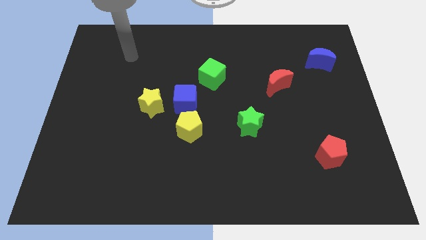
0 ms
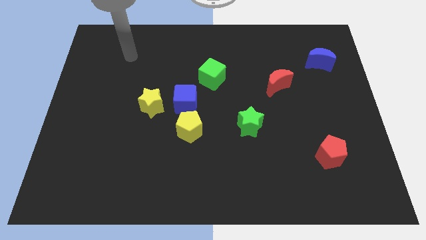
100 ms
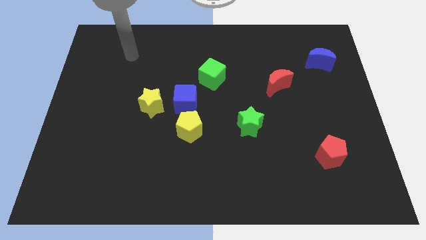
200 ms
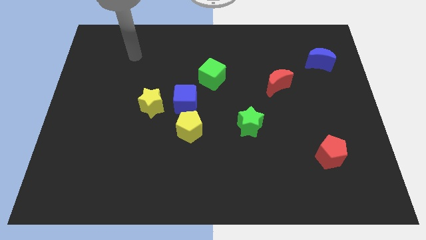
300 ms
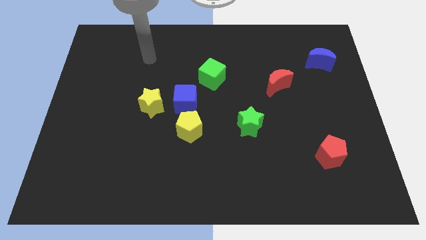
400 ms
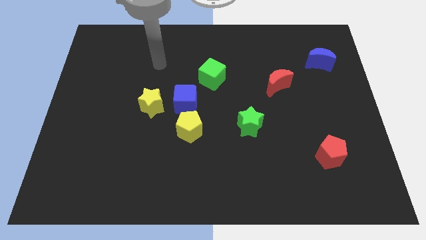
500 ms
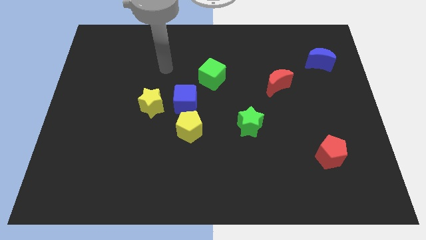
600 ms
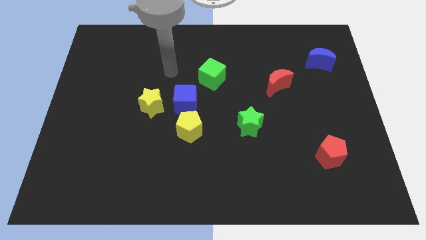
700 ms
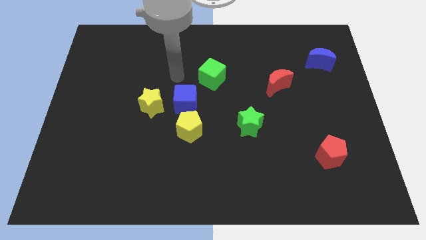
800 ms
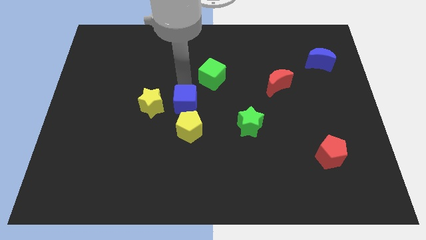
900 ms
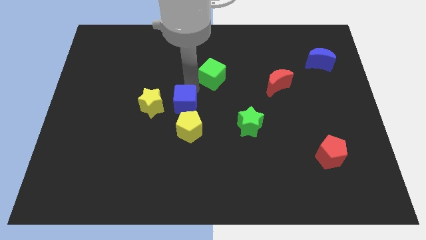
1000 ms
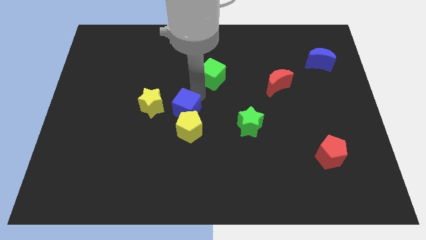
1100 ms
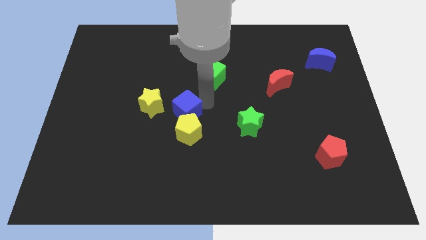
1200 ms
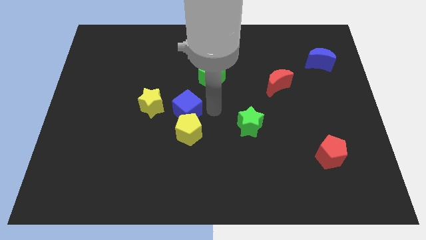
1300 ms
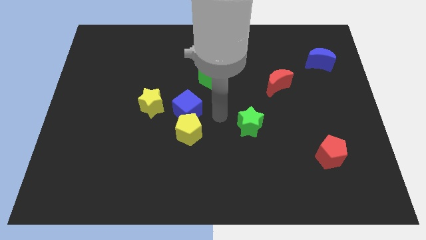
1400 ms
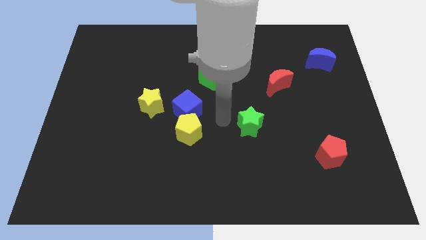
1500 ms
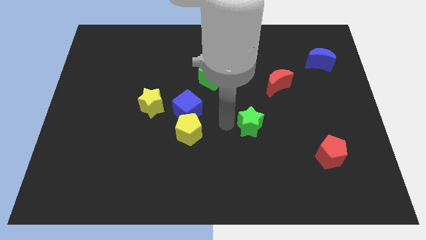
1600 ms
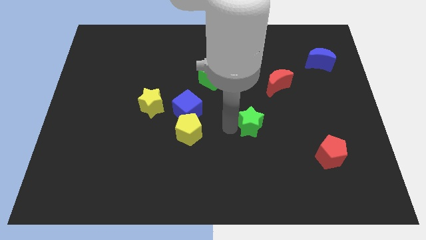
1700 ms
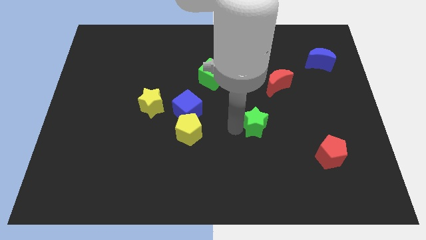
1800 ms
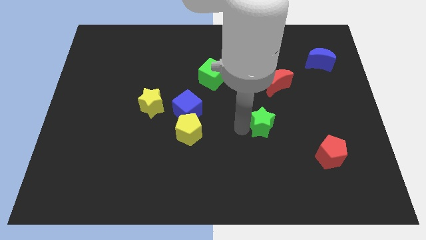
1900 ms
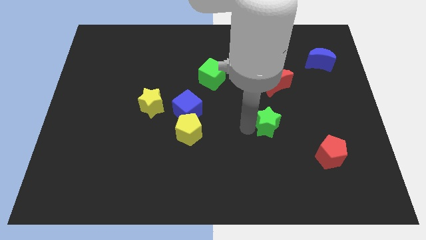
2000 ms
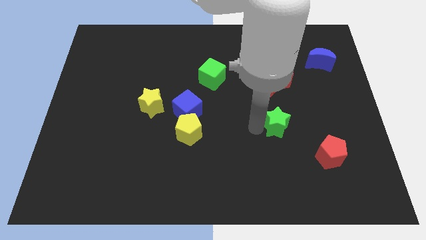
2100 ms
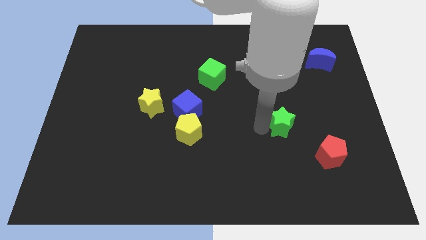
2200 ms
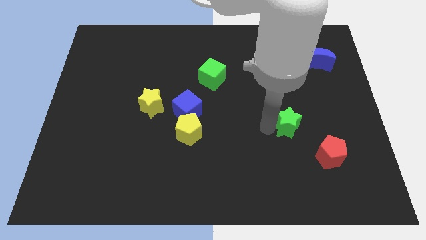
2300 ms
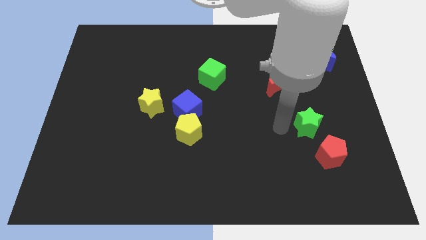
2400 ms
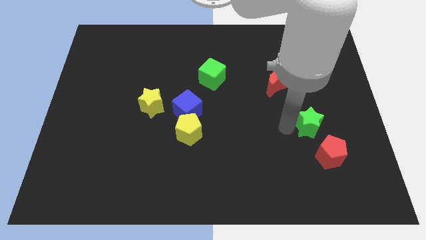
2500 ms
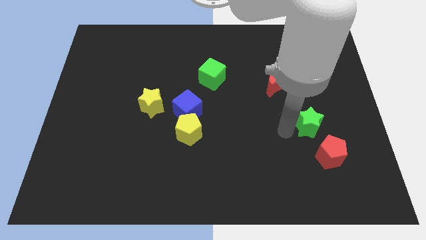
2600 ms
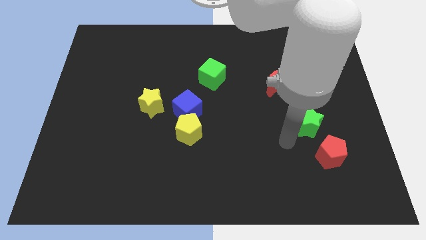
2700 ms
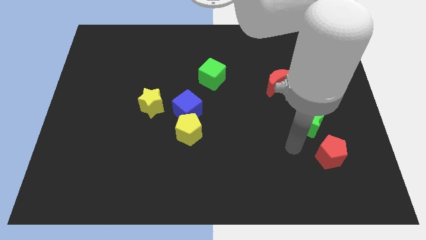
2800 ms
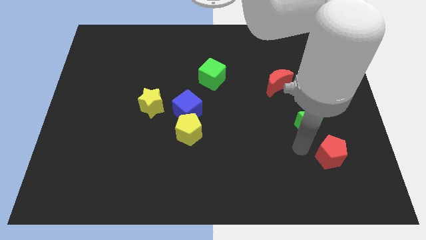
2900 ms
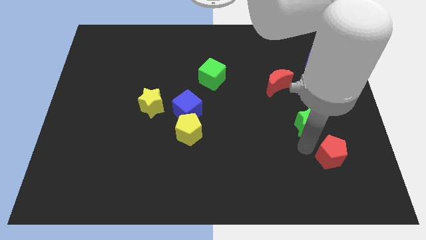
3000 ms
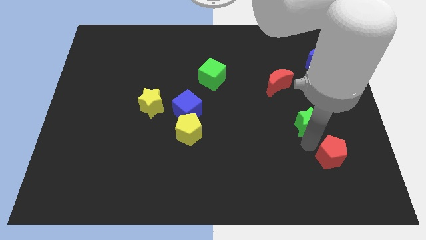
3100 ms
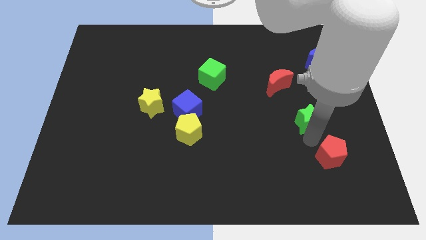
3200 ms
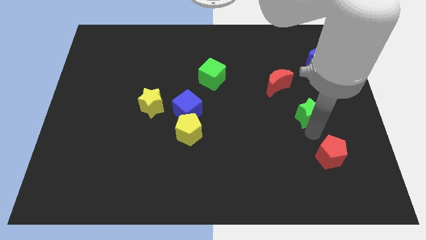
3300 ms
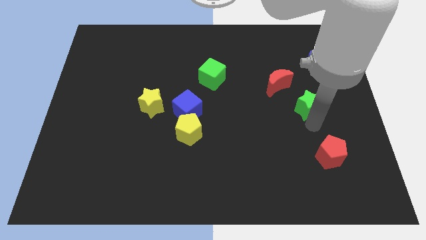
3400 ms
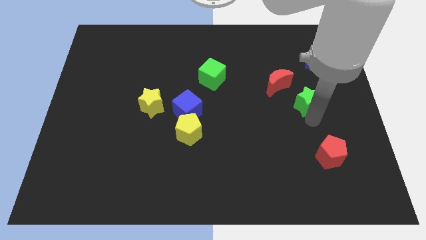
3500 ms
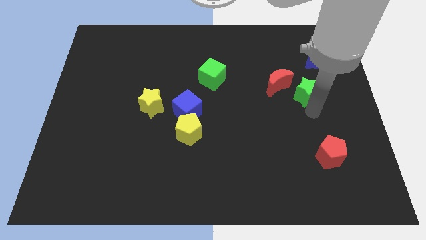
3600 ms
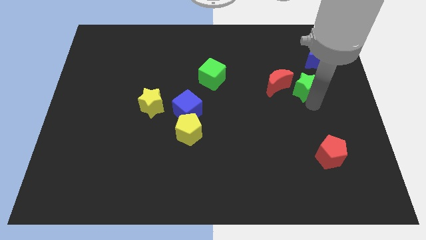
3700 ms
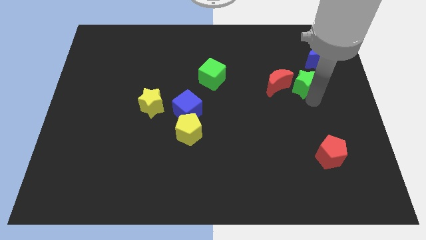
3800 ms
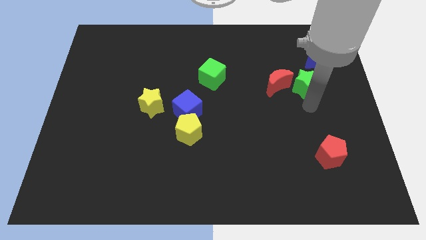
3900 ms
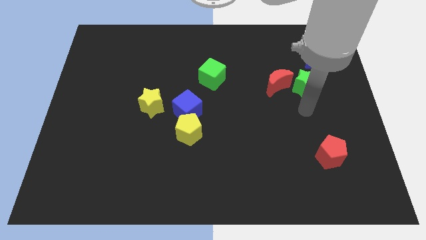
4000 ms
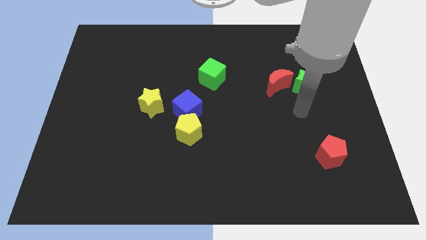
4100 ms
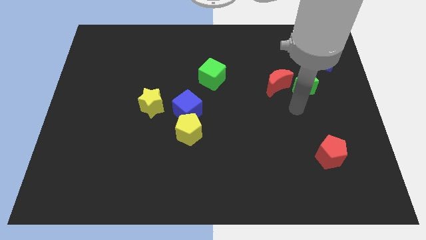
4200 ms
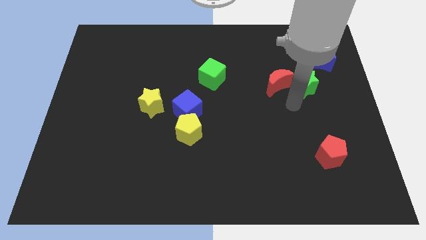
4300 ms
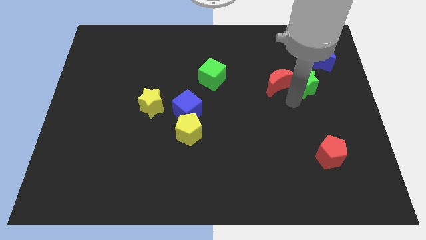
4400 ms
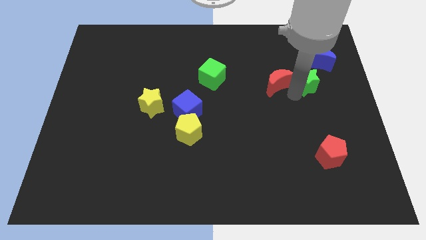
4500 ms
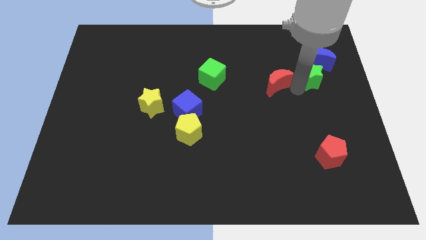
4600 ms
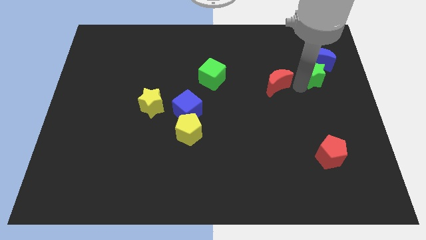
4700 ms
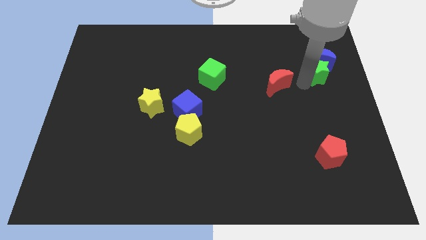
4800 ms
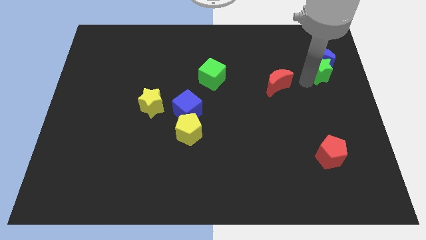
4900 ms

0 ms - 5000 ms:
slide the green star to the blue moon

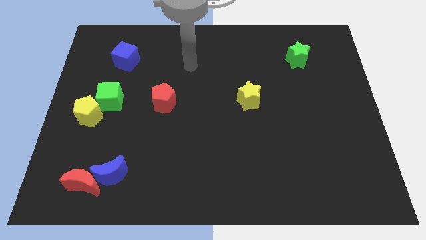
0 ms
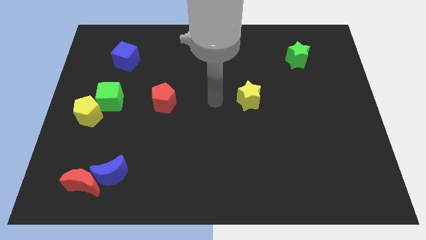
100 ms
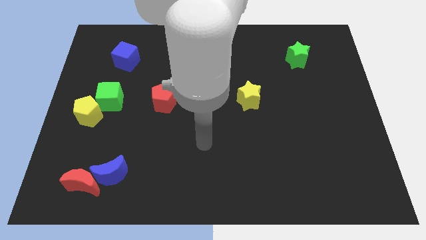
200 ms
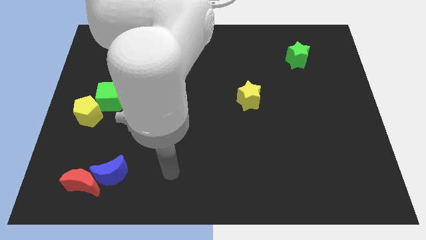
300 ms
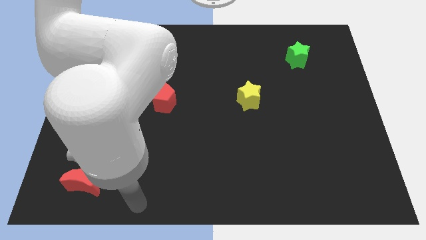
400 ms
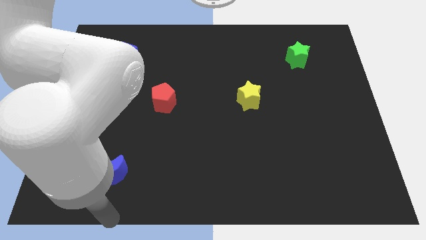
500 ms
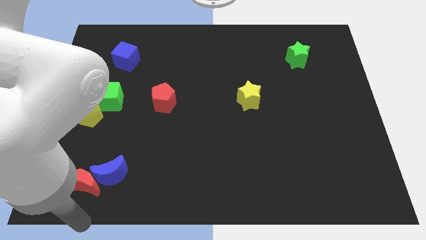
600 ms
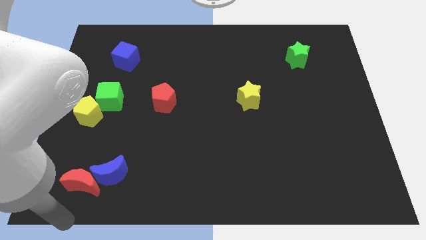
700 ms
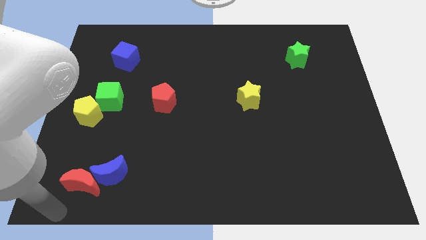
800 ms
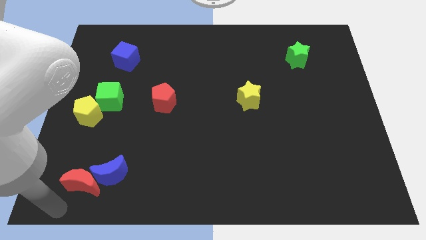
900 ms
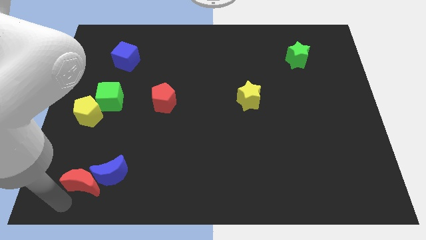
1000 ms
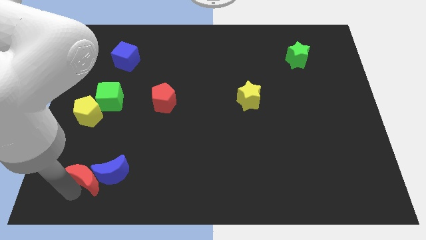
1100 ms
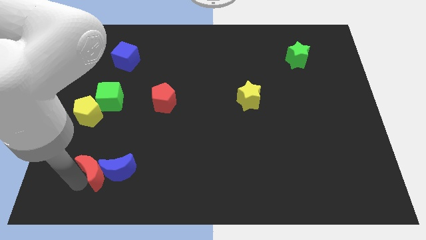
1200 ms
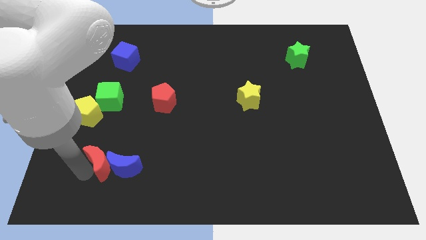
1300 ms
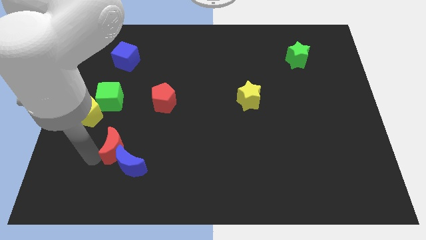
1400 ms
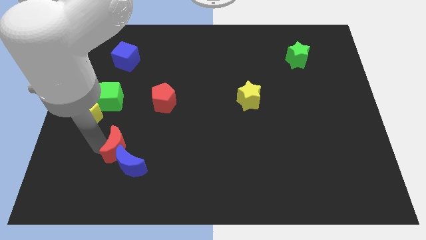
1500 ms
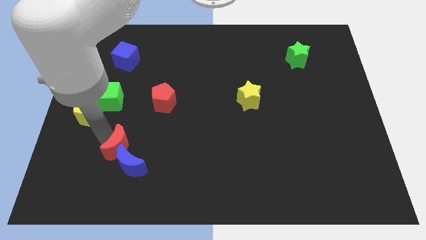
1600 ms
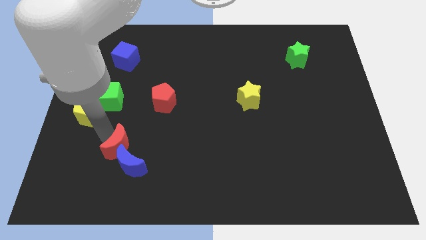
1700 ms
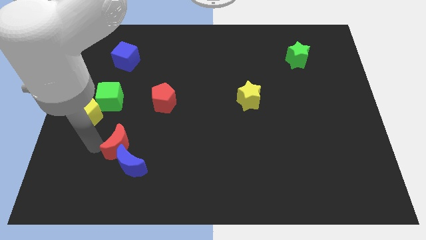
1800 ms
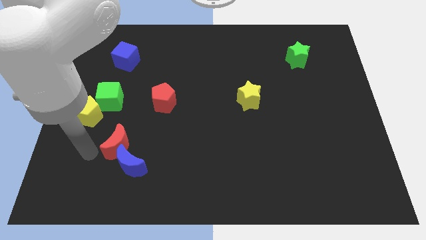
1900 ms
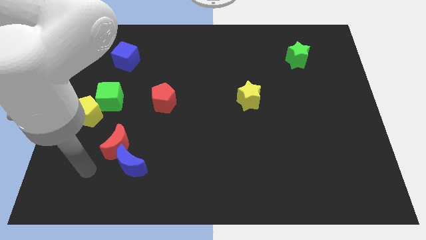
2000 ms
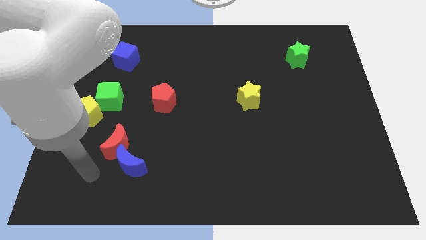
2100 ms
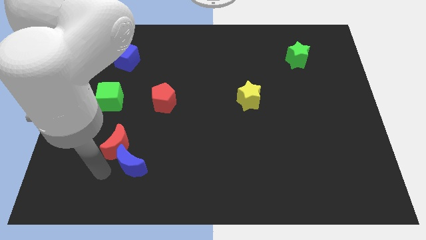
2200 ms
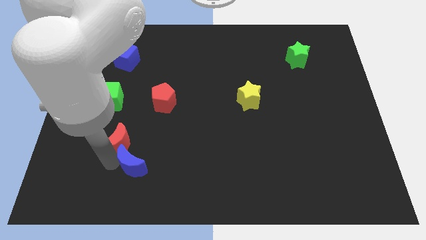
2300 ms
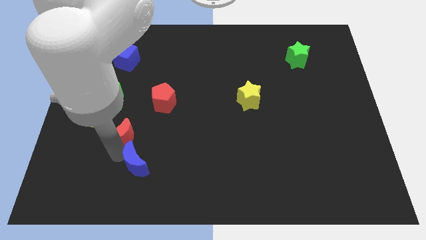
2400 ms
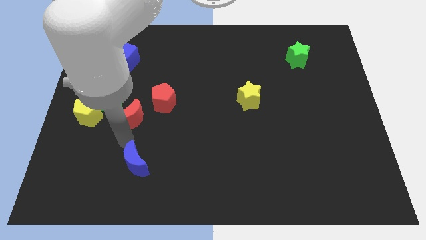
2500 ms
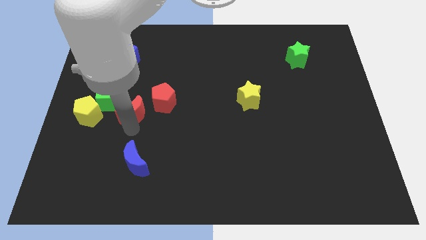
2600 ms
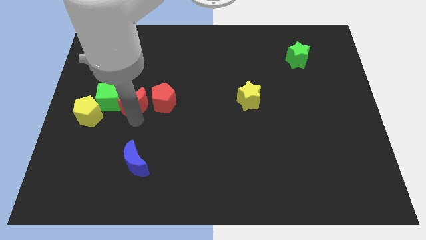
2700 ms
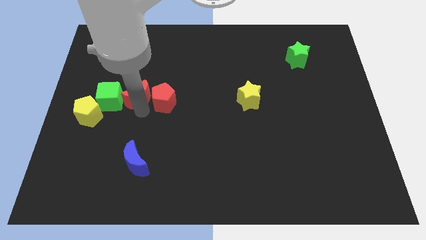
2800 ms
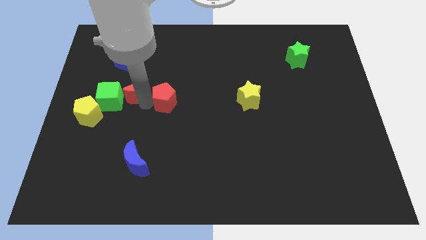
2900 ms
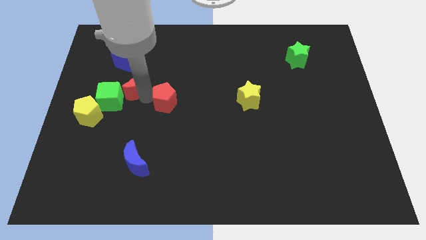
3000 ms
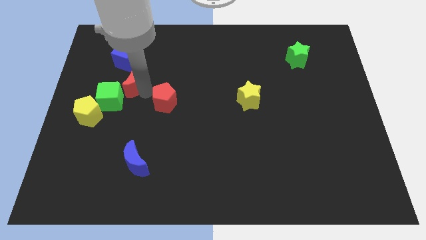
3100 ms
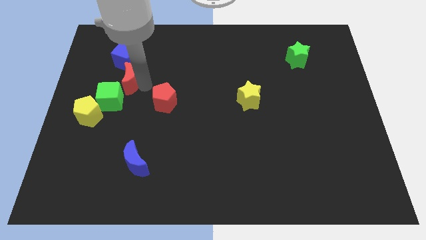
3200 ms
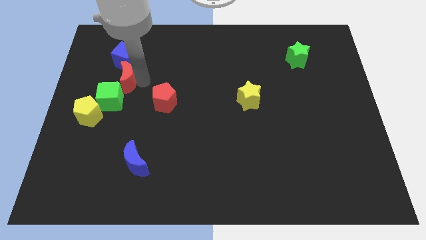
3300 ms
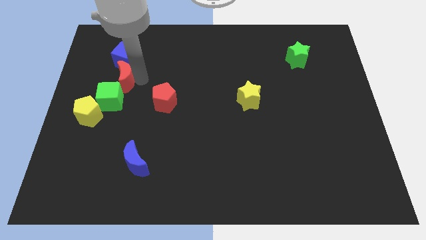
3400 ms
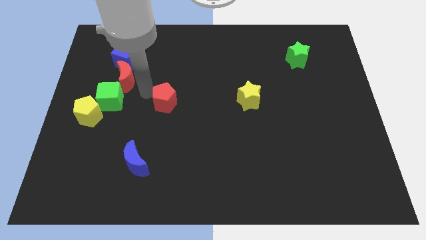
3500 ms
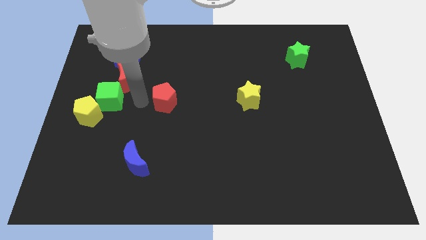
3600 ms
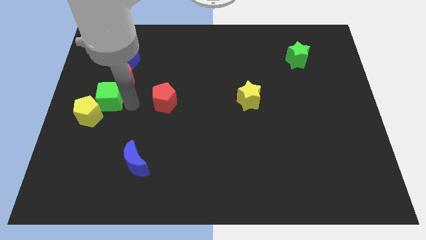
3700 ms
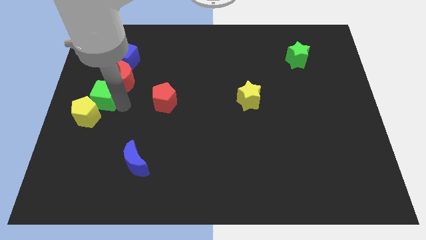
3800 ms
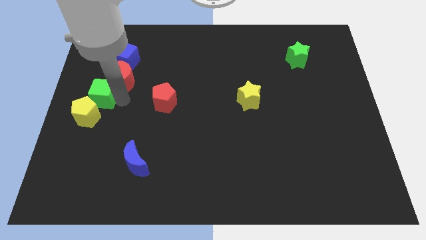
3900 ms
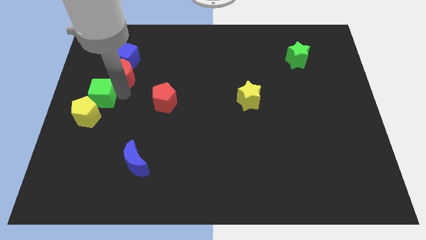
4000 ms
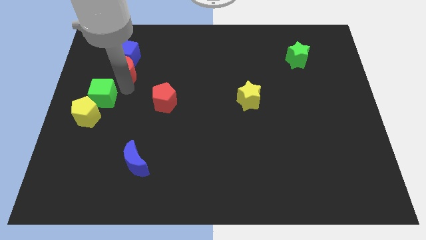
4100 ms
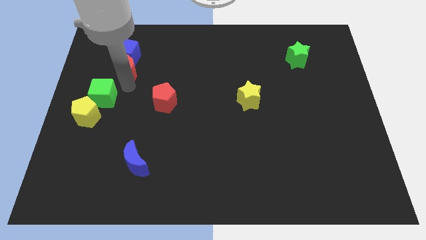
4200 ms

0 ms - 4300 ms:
move the red moon towards the blue cube
